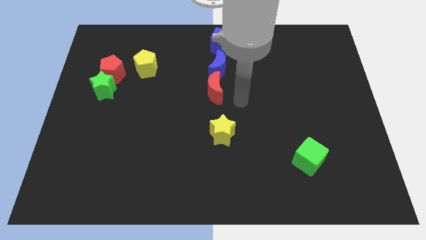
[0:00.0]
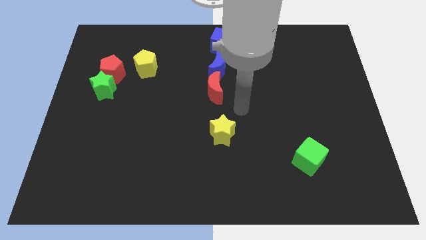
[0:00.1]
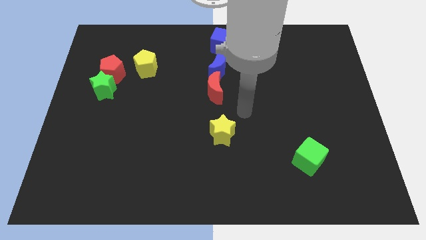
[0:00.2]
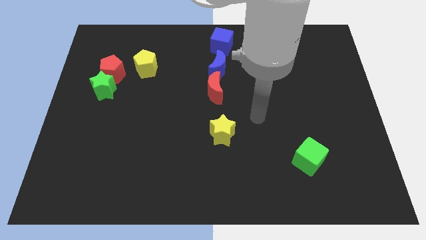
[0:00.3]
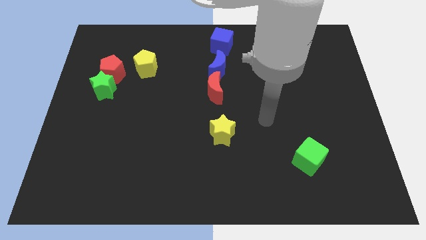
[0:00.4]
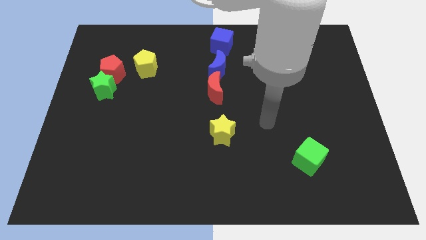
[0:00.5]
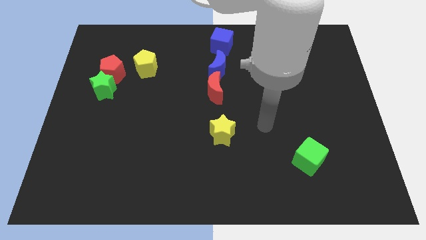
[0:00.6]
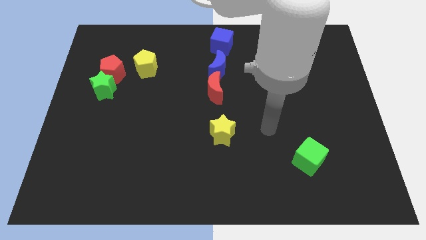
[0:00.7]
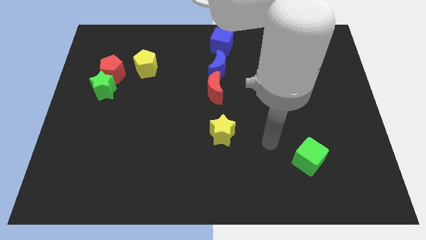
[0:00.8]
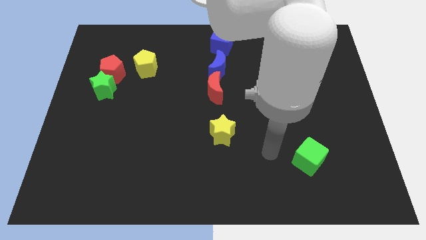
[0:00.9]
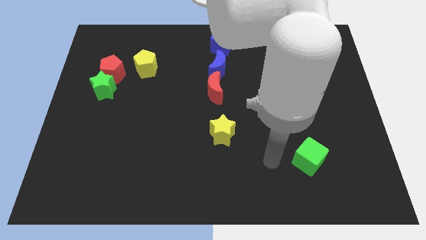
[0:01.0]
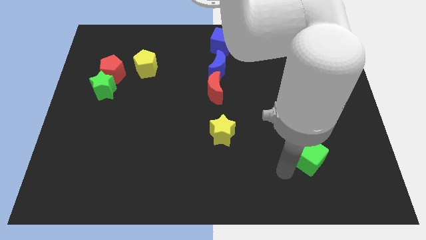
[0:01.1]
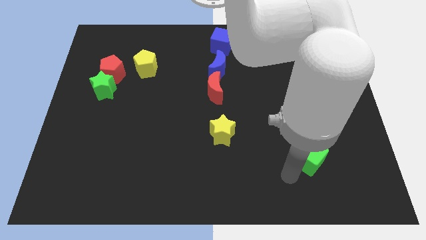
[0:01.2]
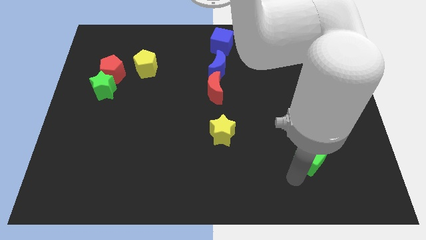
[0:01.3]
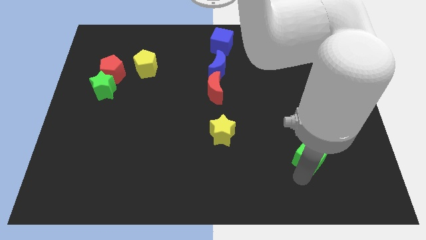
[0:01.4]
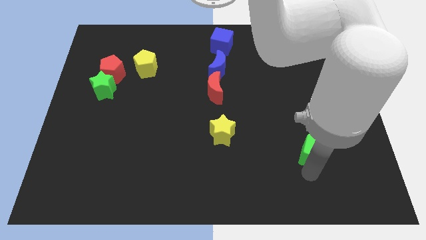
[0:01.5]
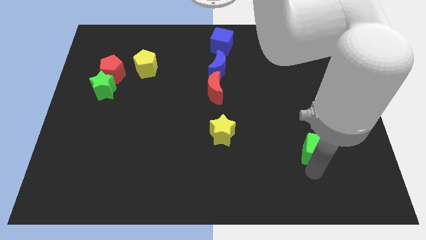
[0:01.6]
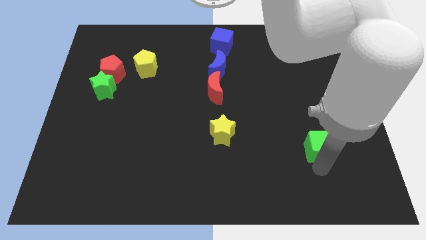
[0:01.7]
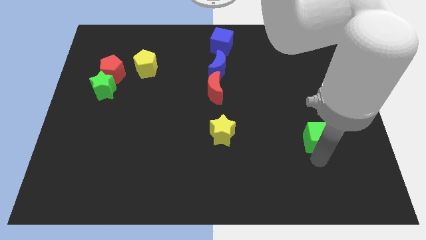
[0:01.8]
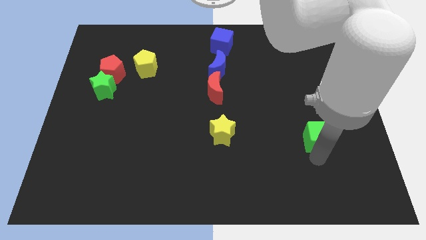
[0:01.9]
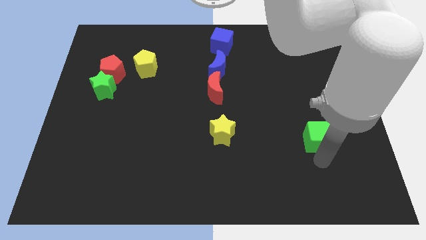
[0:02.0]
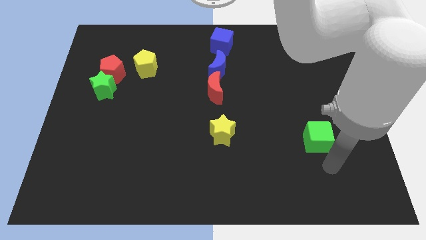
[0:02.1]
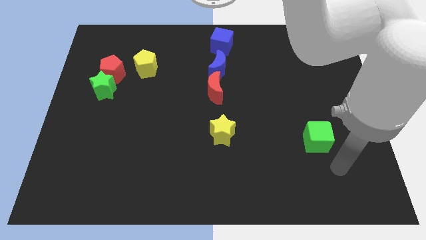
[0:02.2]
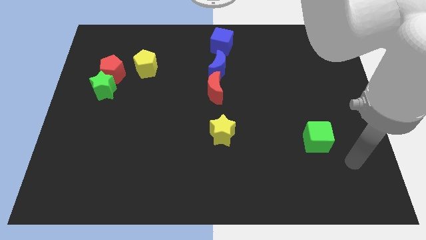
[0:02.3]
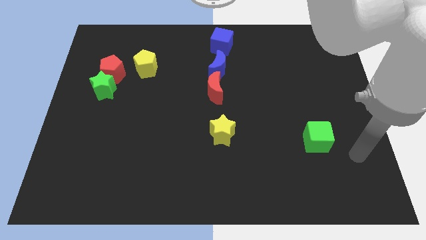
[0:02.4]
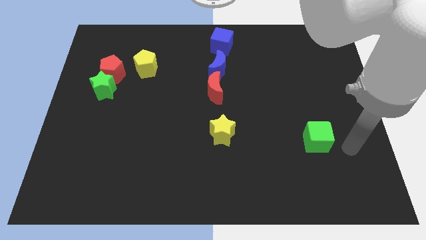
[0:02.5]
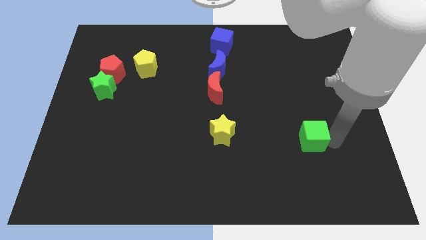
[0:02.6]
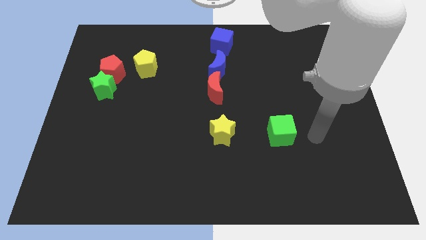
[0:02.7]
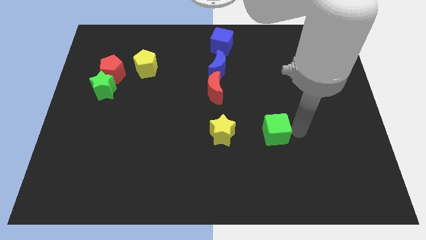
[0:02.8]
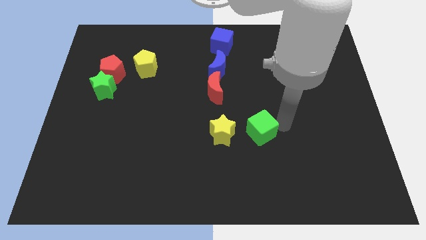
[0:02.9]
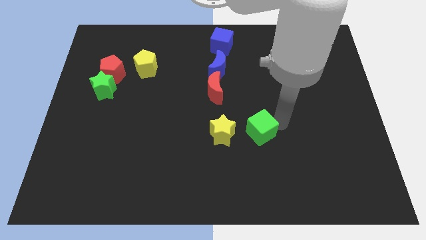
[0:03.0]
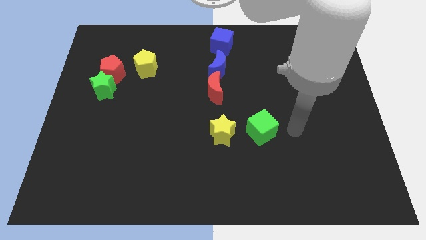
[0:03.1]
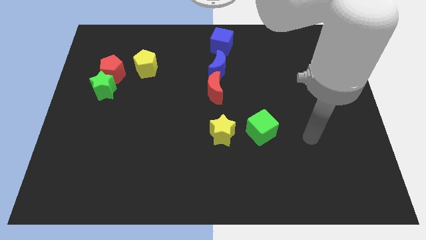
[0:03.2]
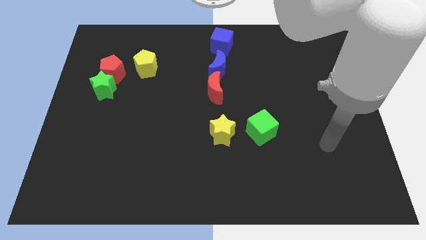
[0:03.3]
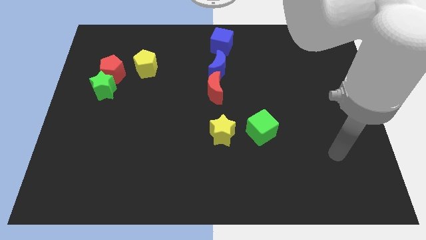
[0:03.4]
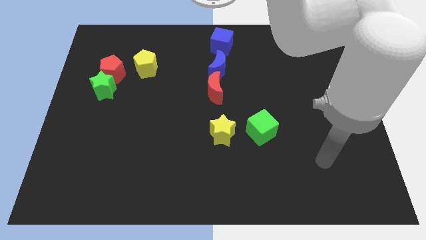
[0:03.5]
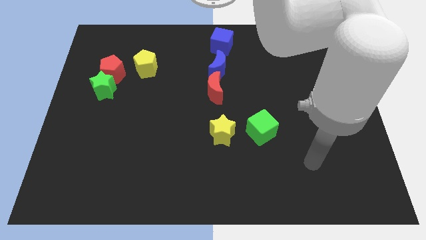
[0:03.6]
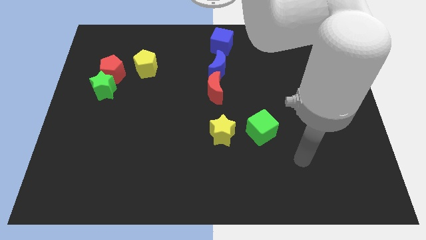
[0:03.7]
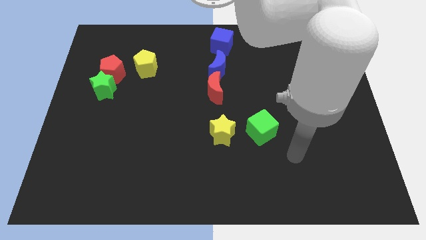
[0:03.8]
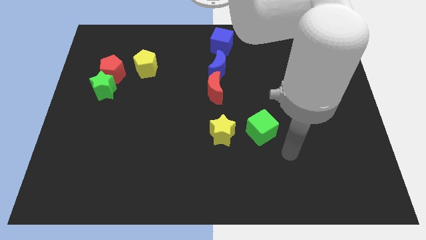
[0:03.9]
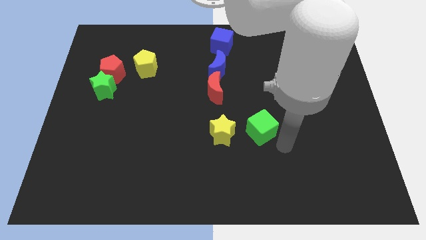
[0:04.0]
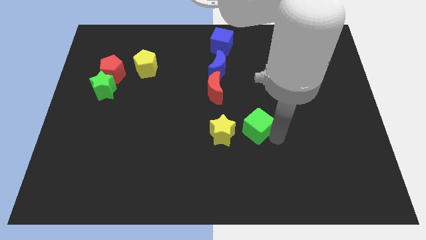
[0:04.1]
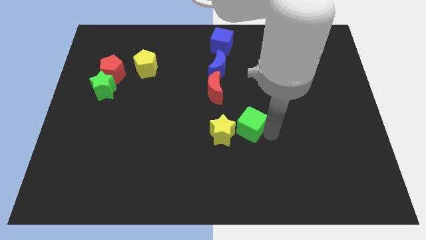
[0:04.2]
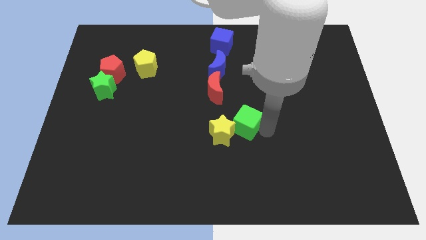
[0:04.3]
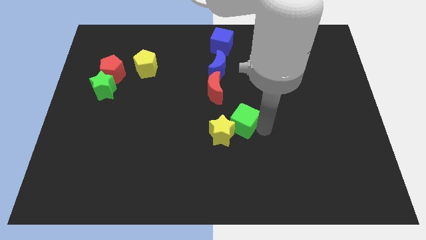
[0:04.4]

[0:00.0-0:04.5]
move the green cube to the top right of the yellow star

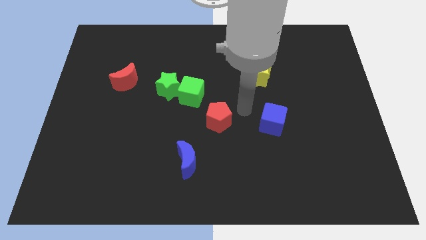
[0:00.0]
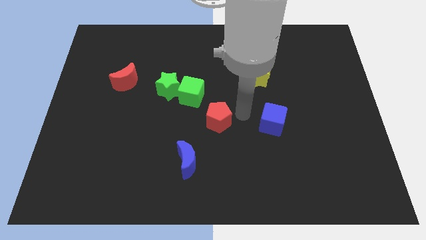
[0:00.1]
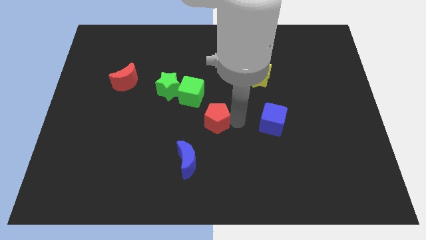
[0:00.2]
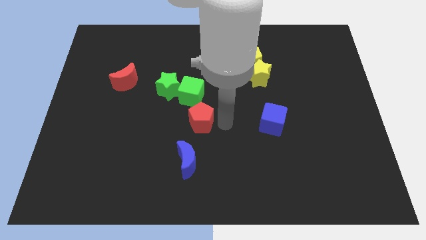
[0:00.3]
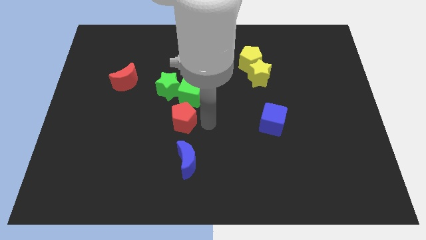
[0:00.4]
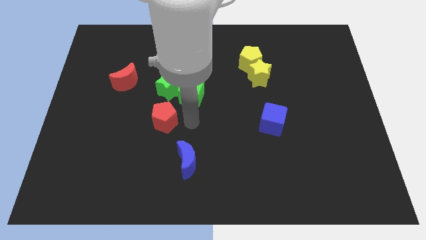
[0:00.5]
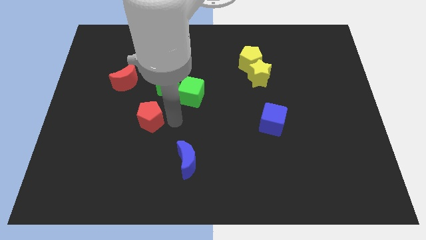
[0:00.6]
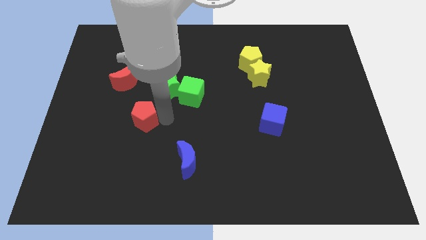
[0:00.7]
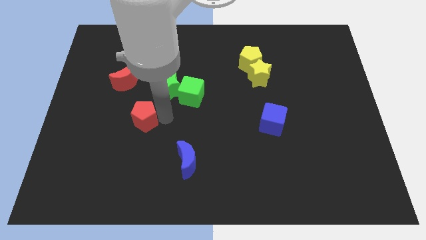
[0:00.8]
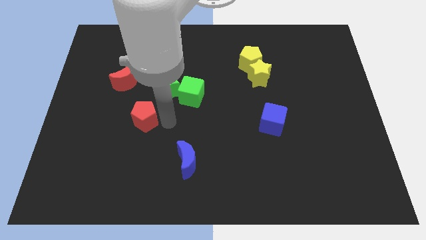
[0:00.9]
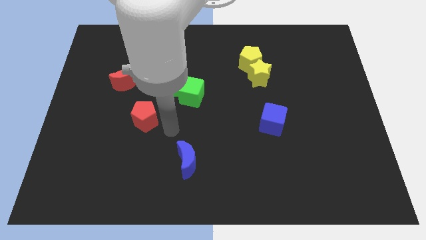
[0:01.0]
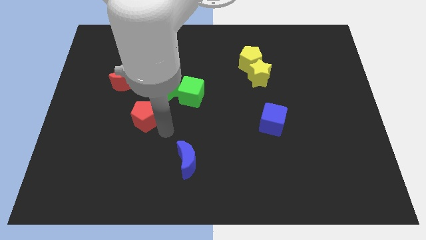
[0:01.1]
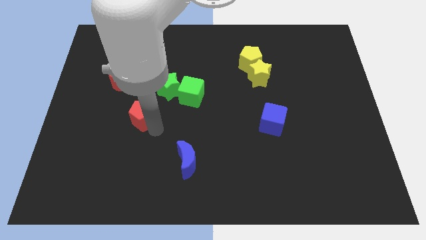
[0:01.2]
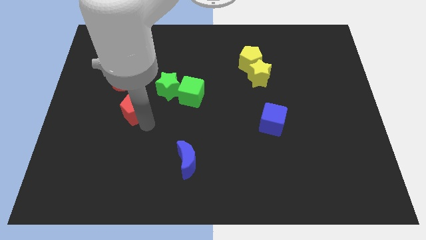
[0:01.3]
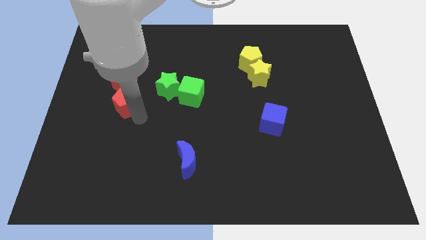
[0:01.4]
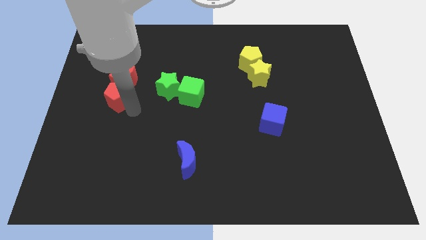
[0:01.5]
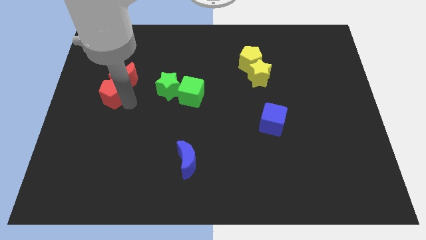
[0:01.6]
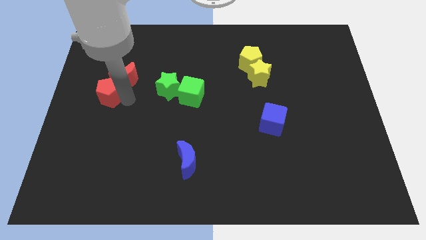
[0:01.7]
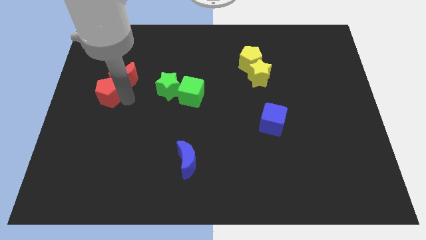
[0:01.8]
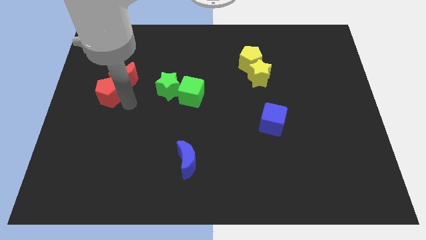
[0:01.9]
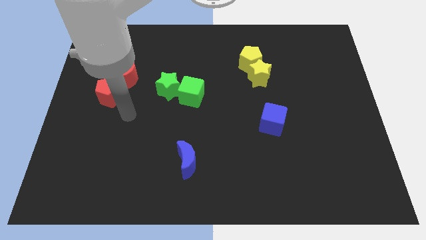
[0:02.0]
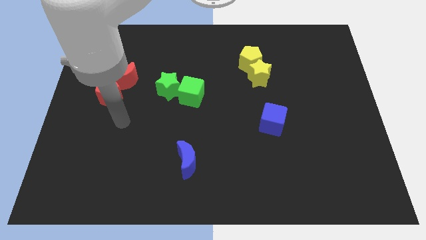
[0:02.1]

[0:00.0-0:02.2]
place red pentagon to the bottom of red moon

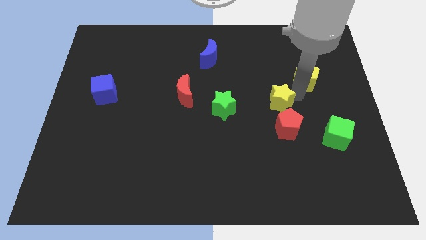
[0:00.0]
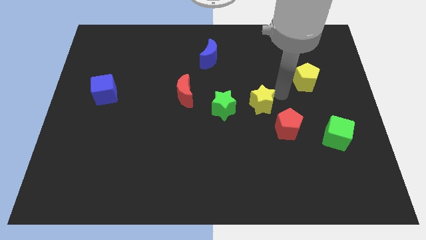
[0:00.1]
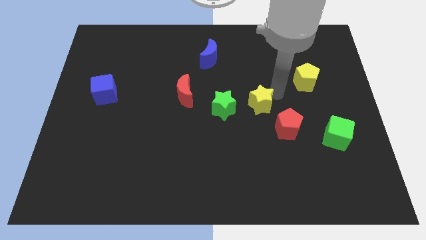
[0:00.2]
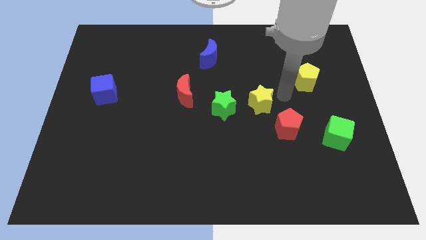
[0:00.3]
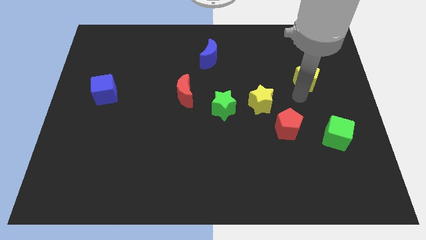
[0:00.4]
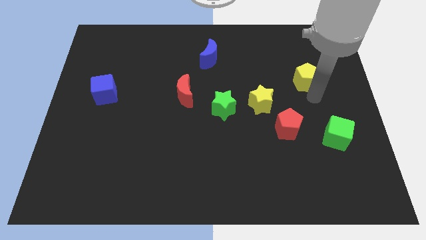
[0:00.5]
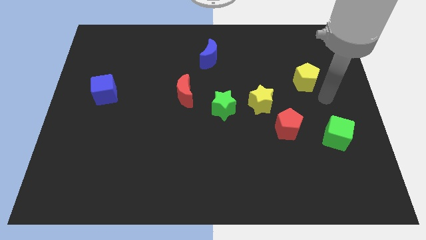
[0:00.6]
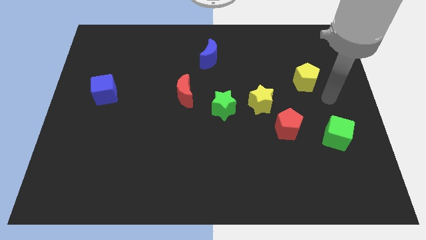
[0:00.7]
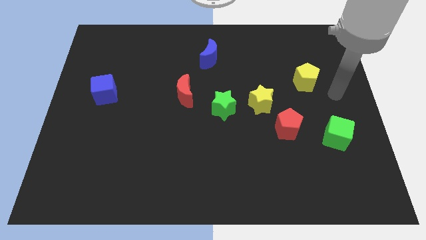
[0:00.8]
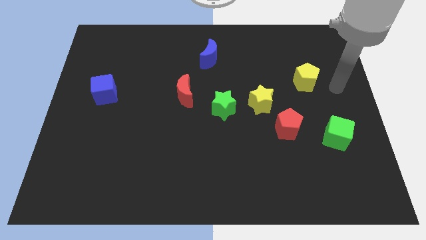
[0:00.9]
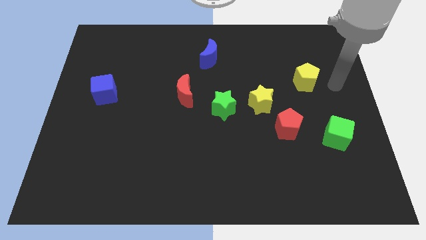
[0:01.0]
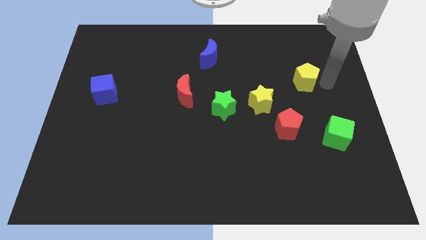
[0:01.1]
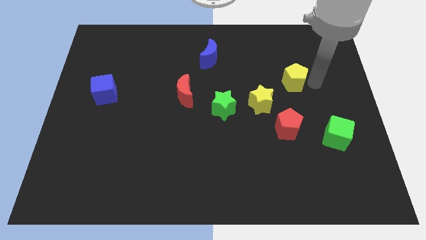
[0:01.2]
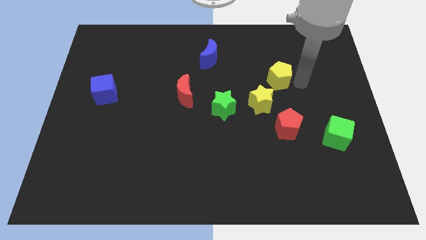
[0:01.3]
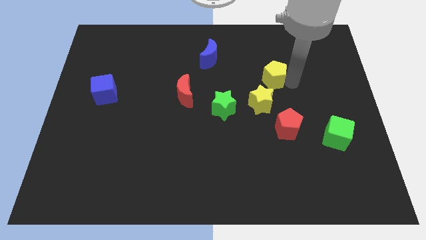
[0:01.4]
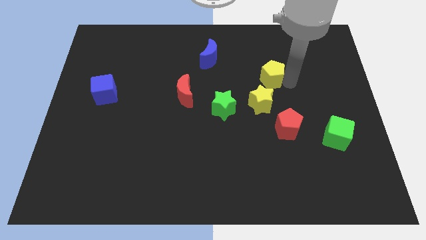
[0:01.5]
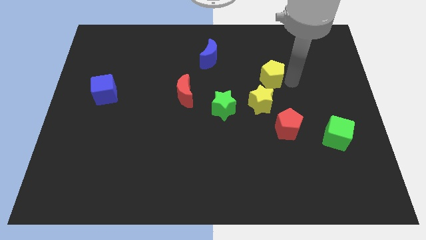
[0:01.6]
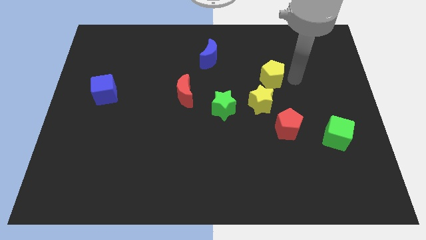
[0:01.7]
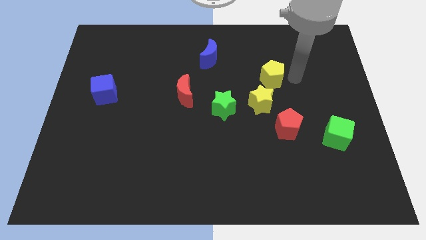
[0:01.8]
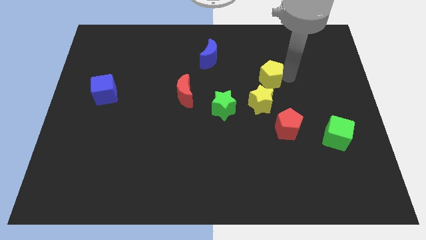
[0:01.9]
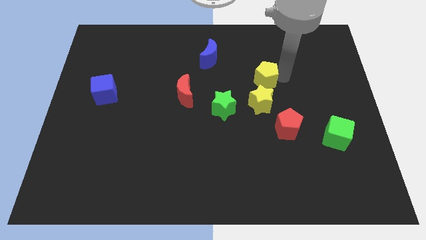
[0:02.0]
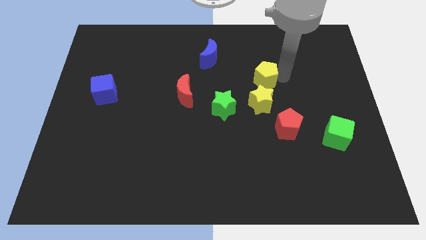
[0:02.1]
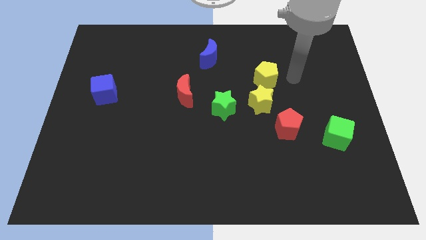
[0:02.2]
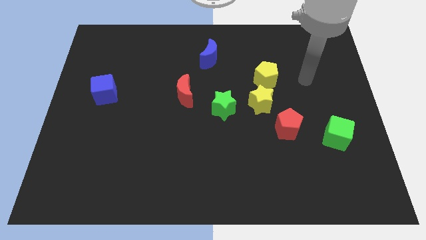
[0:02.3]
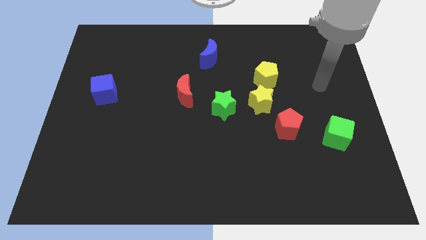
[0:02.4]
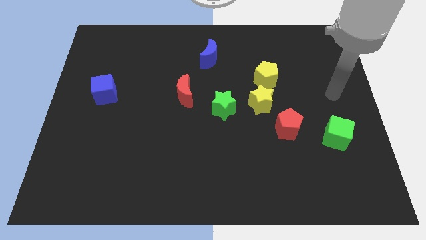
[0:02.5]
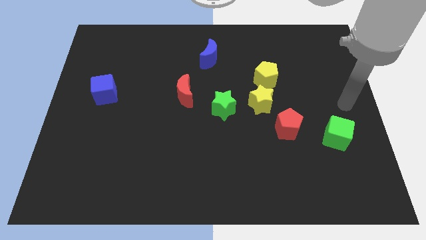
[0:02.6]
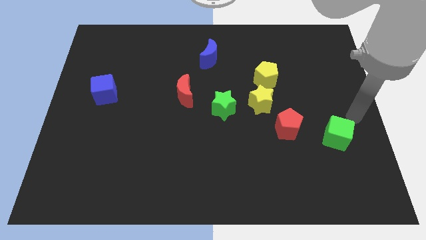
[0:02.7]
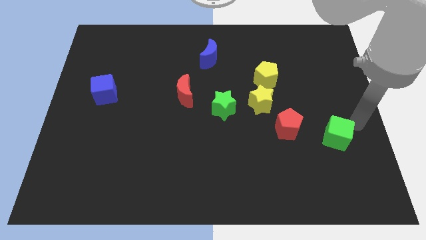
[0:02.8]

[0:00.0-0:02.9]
place the yellow pentagon above the yellow star
